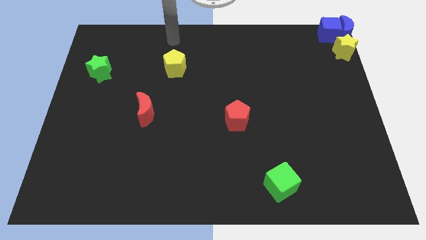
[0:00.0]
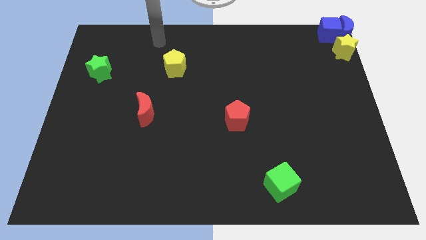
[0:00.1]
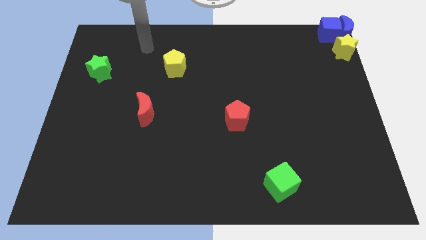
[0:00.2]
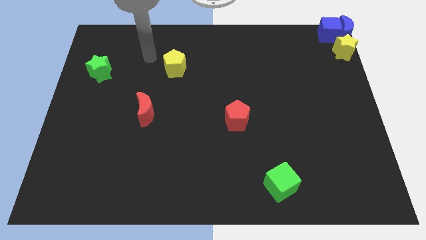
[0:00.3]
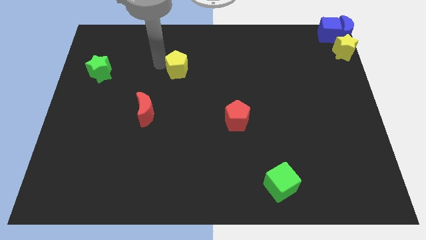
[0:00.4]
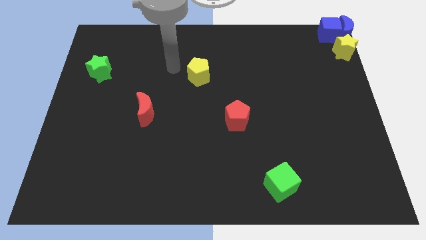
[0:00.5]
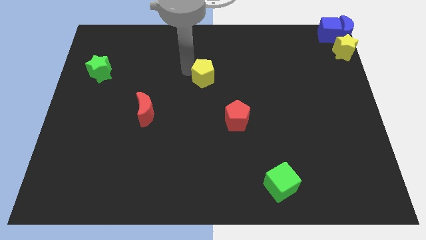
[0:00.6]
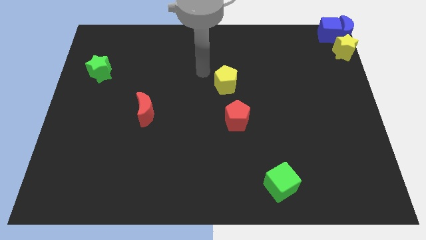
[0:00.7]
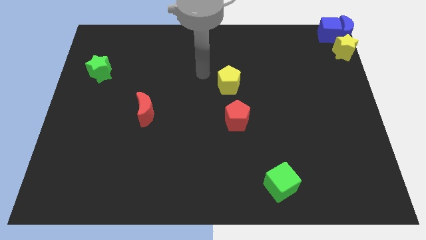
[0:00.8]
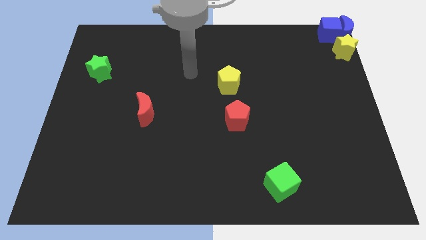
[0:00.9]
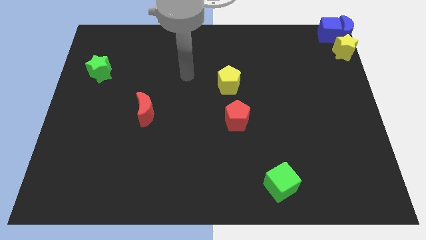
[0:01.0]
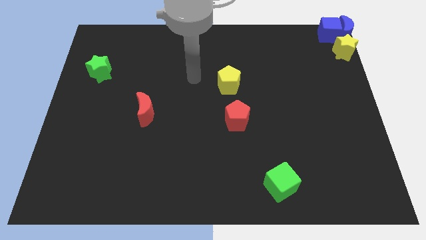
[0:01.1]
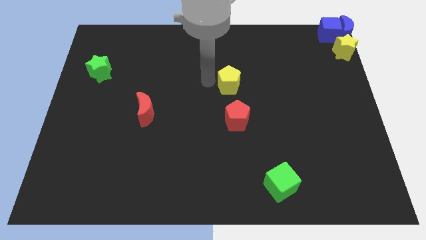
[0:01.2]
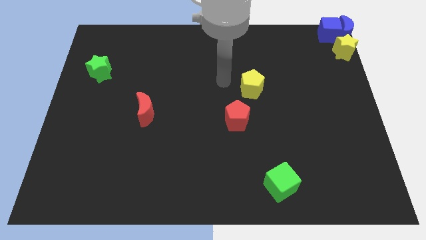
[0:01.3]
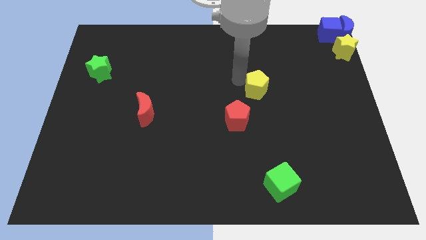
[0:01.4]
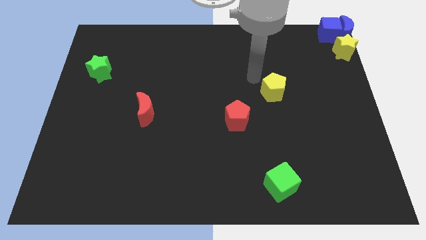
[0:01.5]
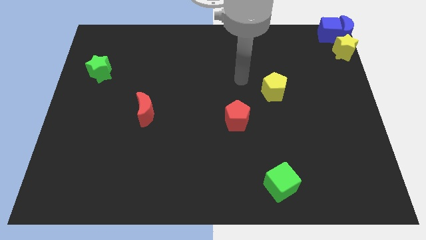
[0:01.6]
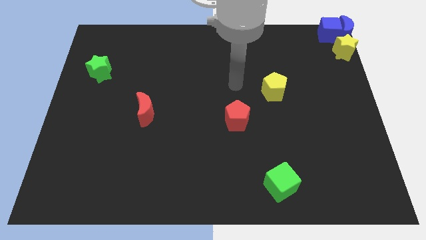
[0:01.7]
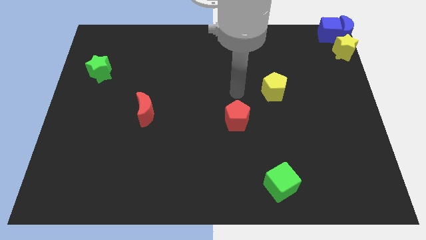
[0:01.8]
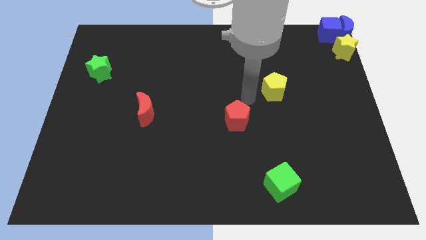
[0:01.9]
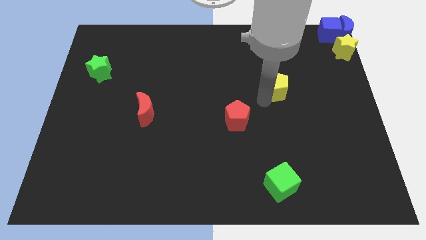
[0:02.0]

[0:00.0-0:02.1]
place yellow pentagon to the top right of the red pentagon

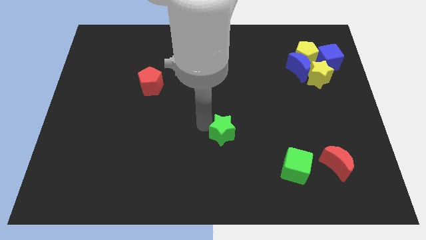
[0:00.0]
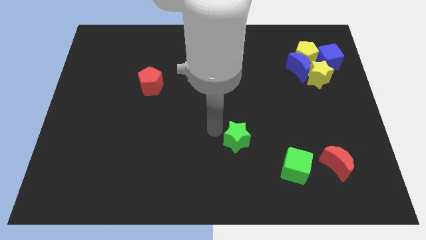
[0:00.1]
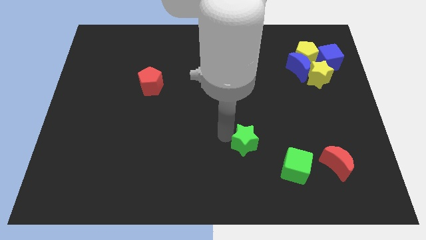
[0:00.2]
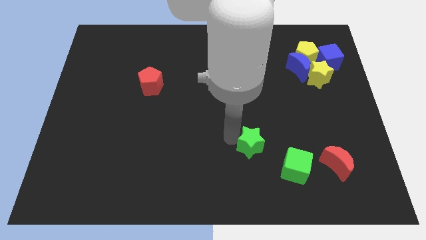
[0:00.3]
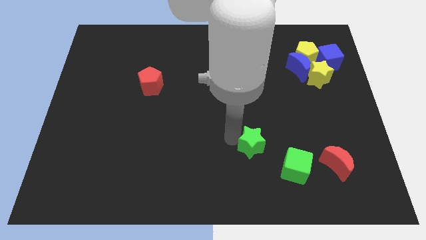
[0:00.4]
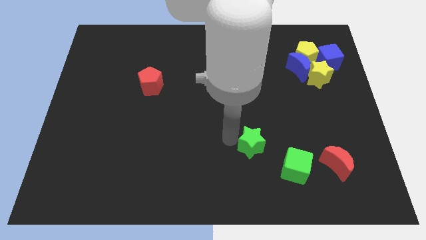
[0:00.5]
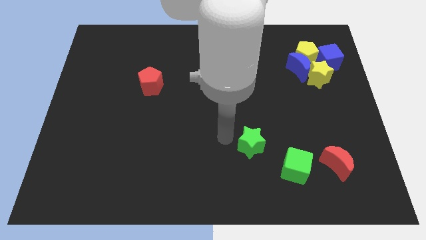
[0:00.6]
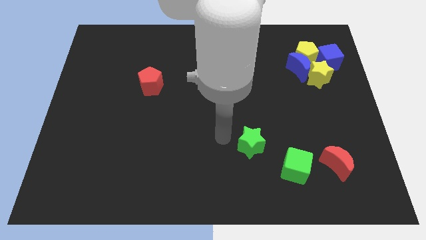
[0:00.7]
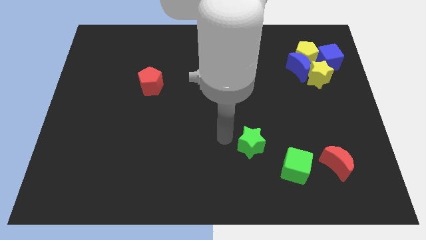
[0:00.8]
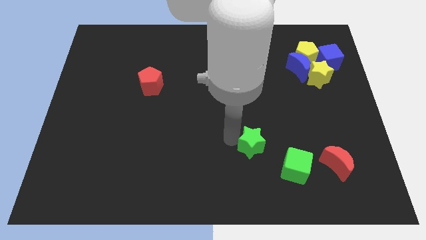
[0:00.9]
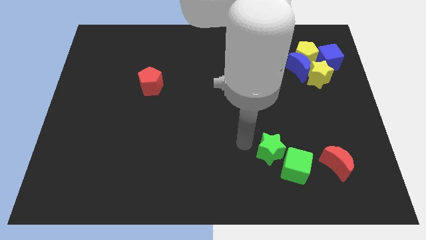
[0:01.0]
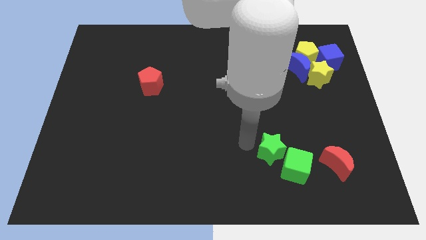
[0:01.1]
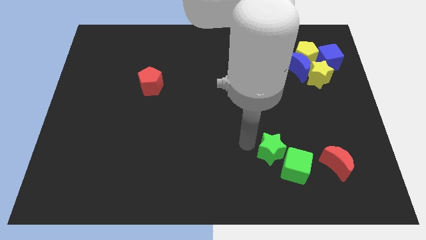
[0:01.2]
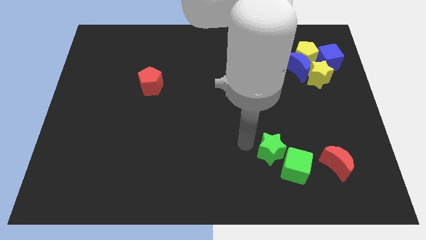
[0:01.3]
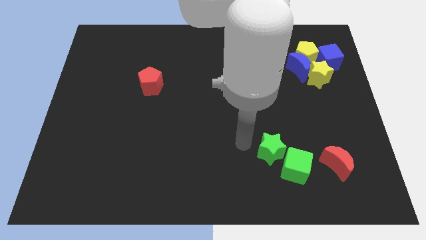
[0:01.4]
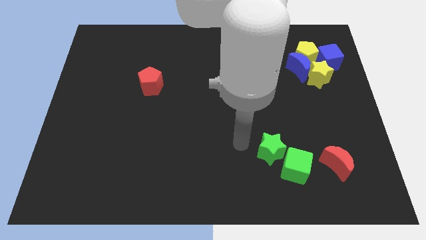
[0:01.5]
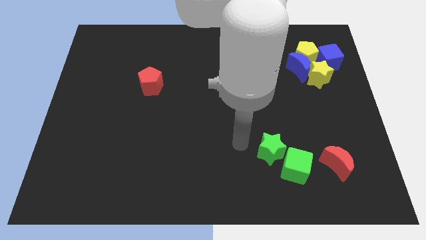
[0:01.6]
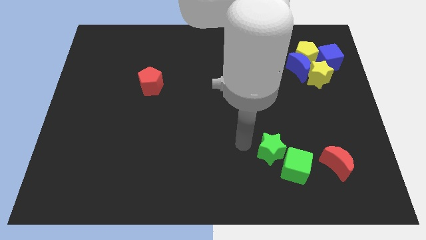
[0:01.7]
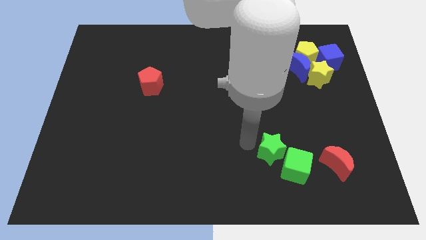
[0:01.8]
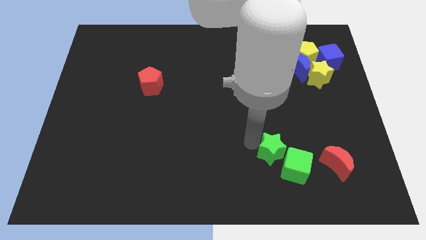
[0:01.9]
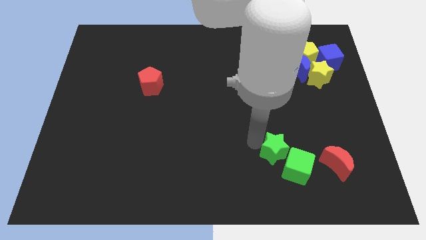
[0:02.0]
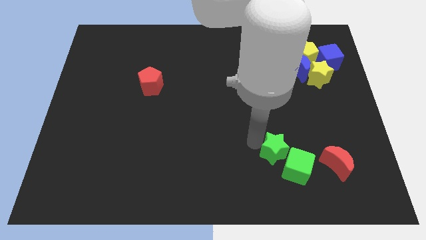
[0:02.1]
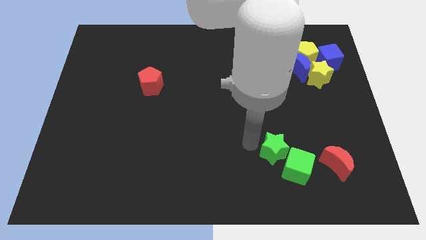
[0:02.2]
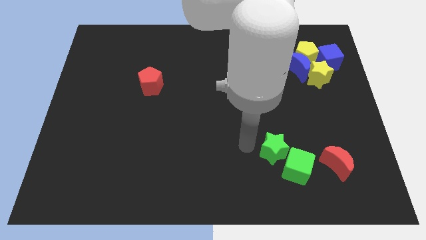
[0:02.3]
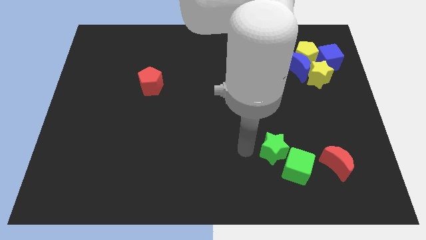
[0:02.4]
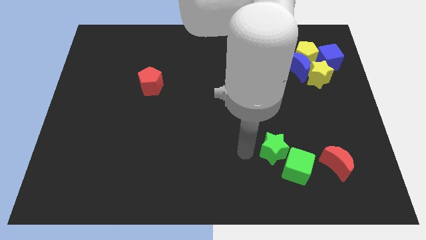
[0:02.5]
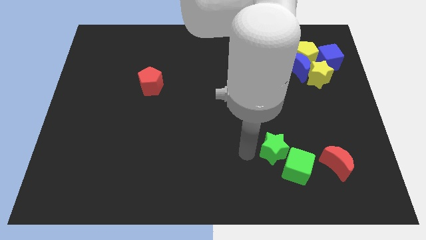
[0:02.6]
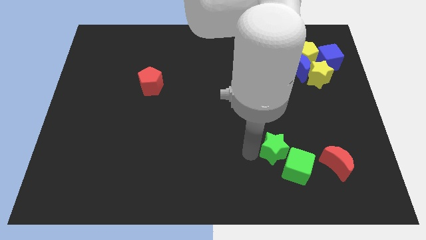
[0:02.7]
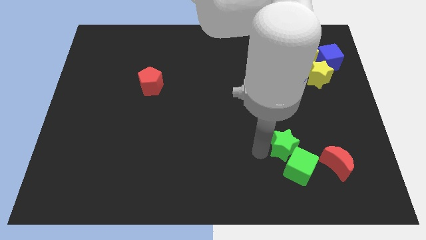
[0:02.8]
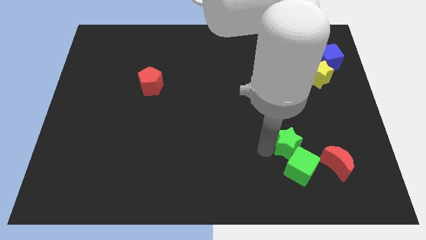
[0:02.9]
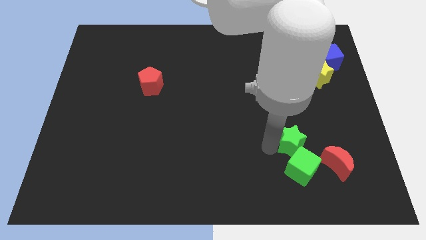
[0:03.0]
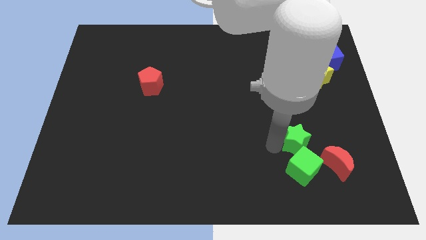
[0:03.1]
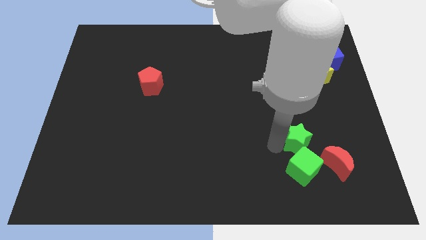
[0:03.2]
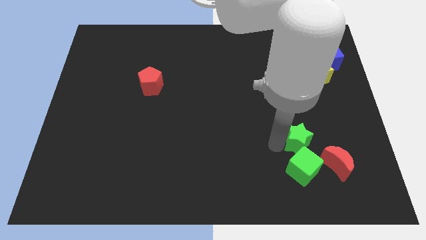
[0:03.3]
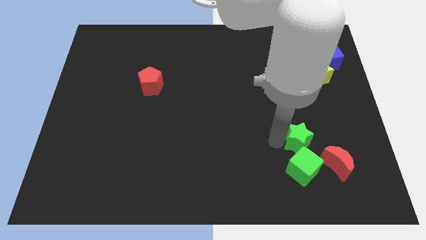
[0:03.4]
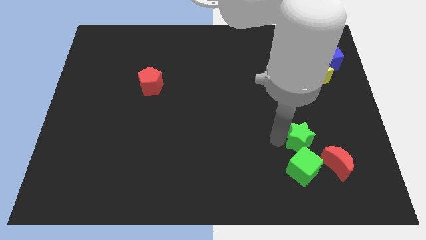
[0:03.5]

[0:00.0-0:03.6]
push the green star to the top of the green cube

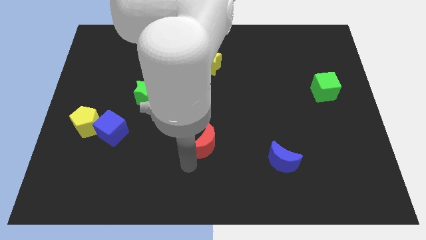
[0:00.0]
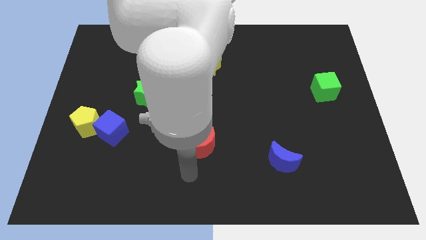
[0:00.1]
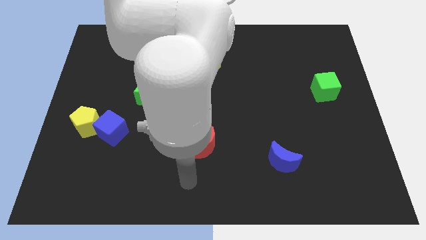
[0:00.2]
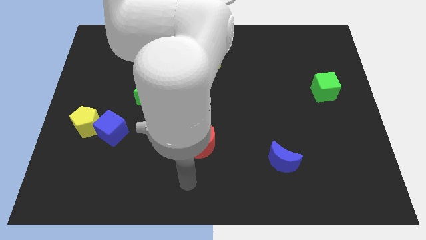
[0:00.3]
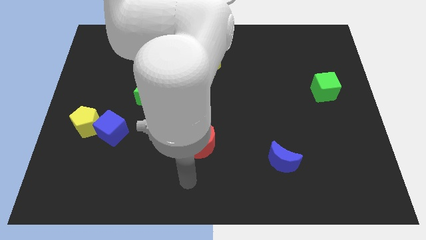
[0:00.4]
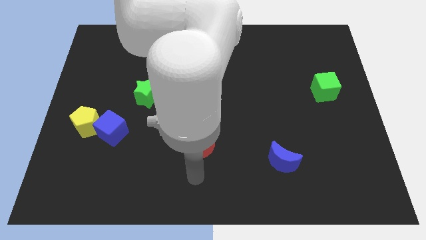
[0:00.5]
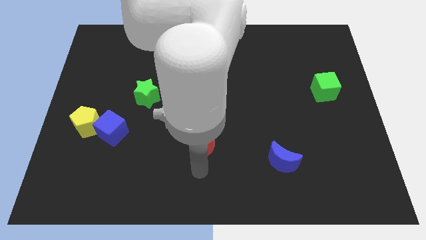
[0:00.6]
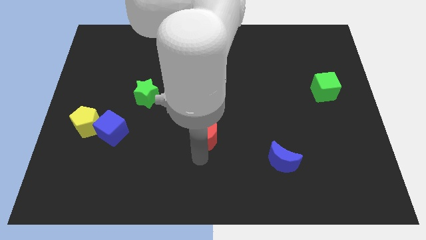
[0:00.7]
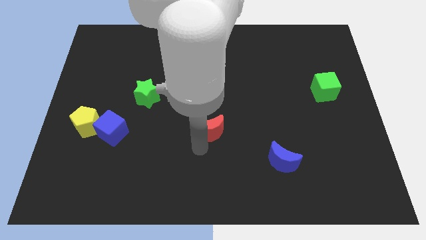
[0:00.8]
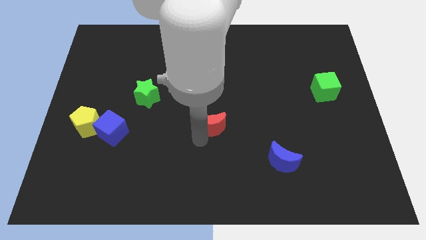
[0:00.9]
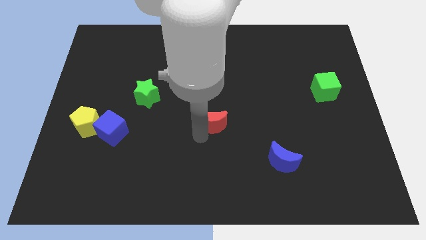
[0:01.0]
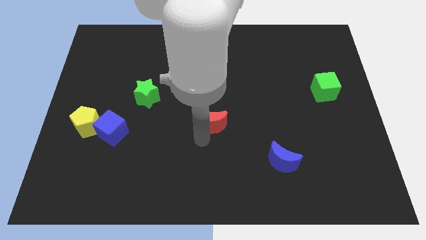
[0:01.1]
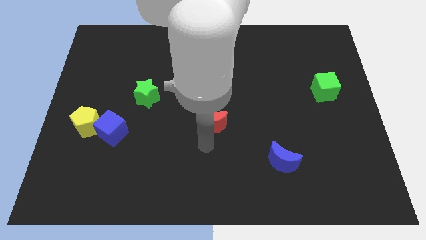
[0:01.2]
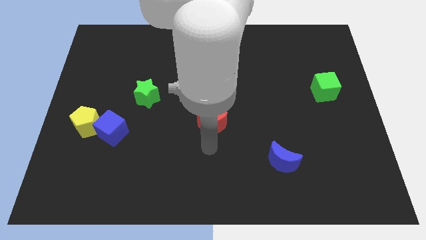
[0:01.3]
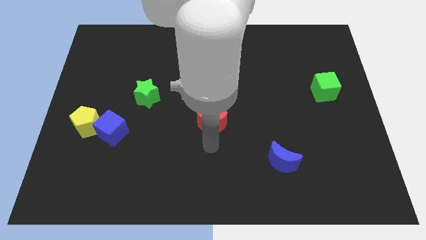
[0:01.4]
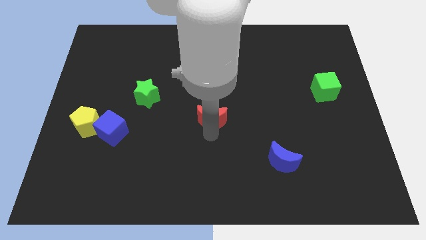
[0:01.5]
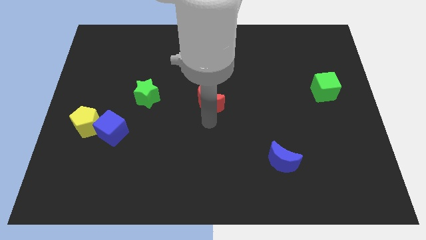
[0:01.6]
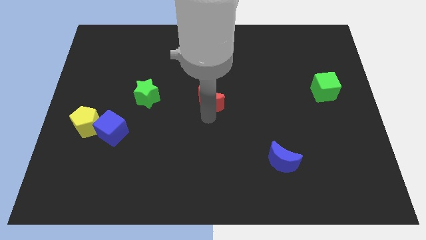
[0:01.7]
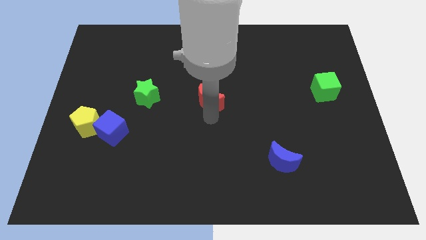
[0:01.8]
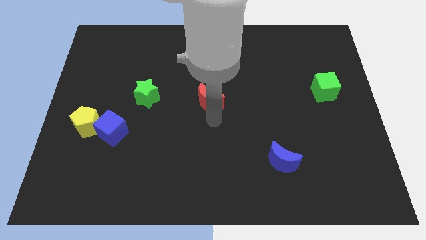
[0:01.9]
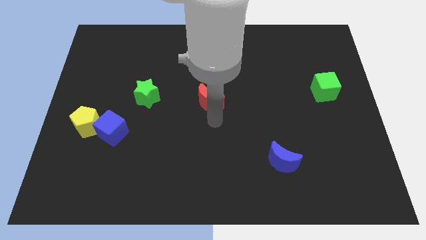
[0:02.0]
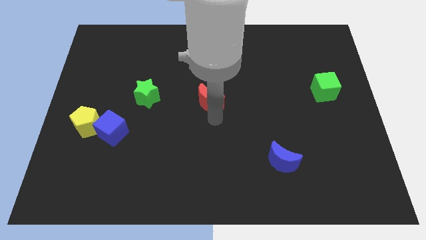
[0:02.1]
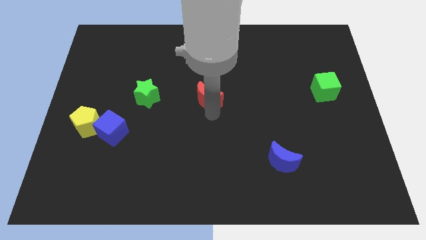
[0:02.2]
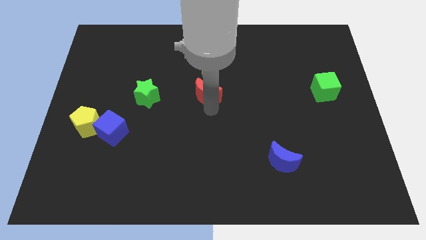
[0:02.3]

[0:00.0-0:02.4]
move the red crescent towards bottom of yellow star

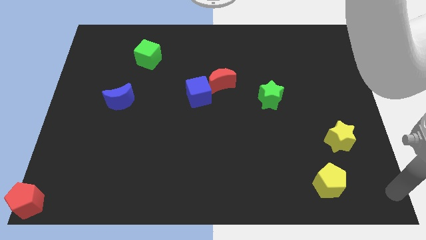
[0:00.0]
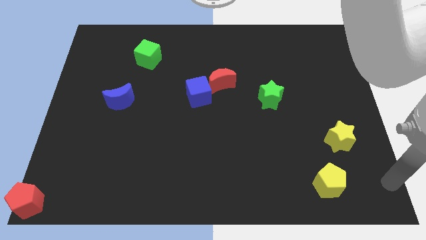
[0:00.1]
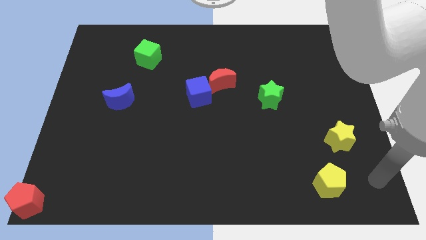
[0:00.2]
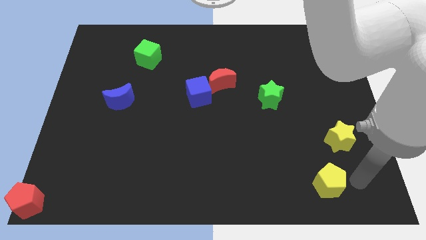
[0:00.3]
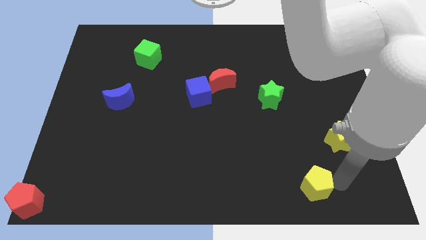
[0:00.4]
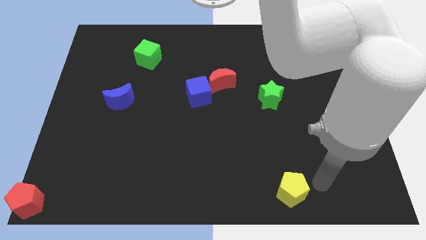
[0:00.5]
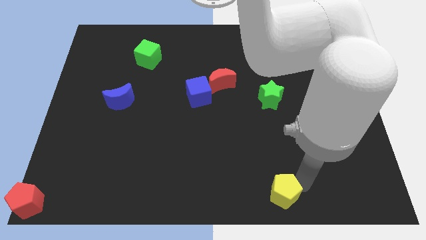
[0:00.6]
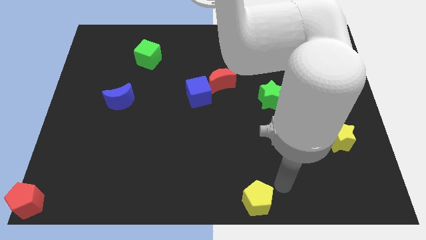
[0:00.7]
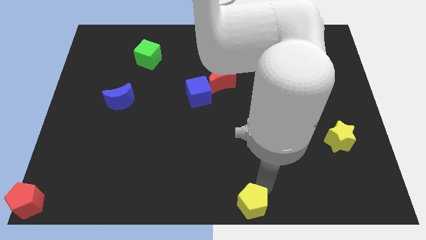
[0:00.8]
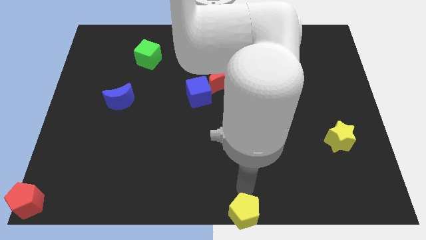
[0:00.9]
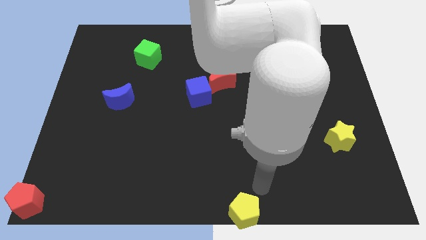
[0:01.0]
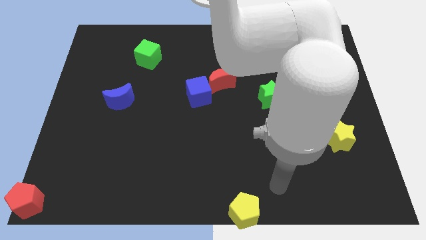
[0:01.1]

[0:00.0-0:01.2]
drag yellow pentagon to the bottom center
